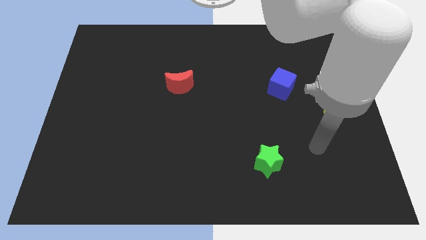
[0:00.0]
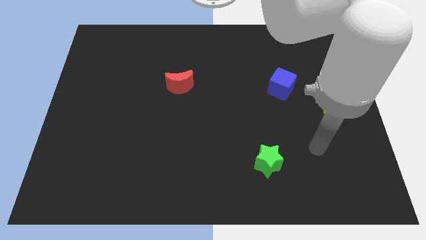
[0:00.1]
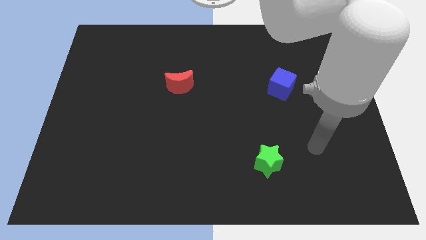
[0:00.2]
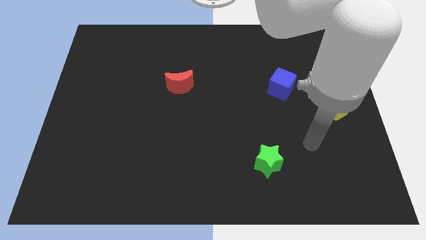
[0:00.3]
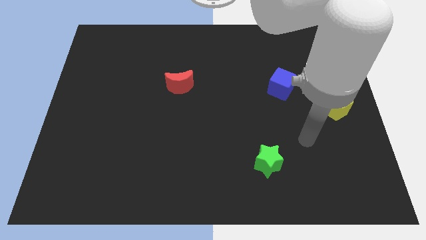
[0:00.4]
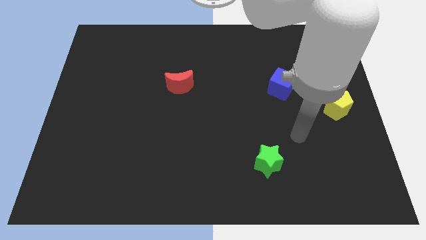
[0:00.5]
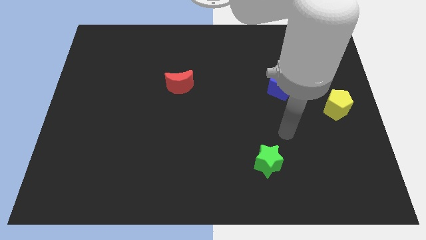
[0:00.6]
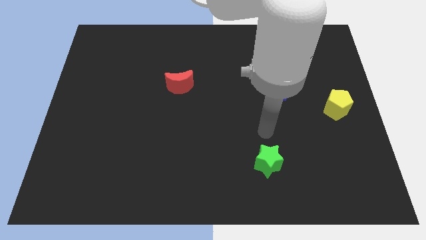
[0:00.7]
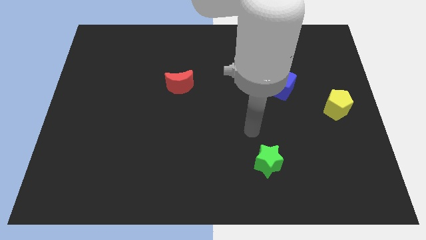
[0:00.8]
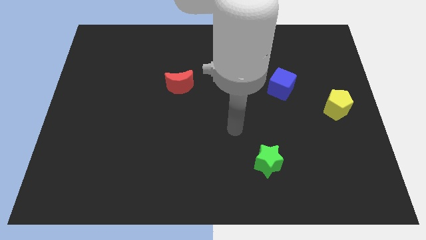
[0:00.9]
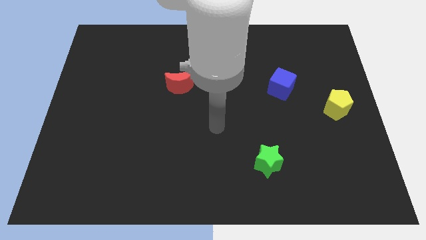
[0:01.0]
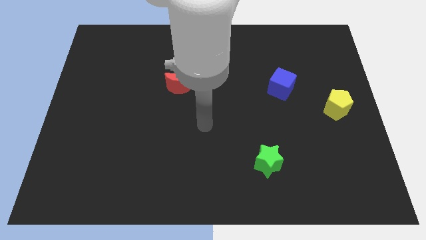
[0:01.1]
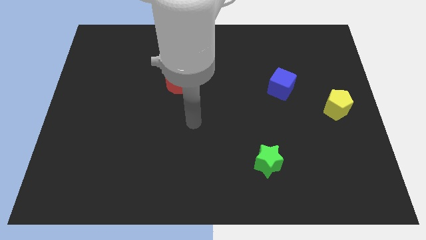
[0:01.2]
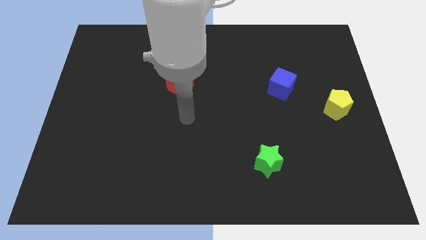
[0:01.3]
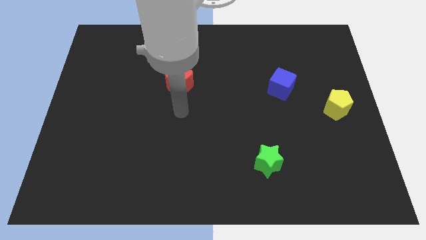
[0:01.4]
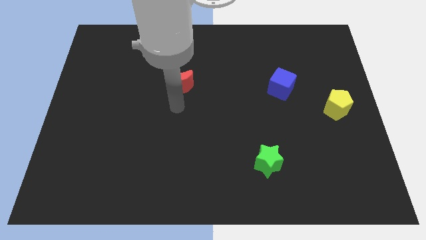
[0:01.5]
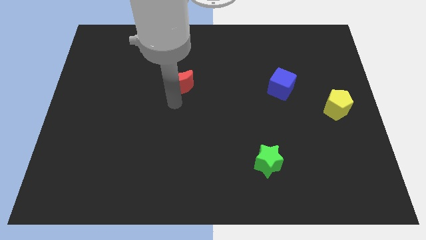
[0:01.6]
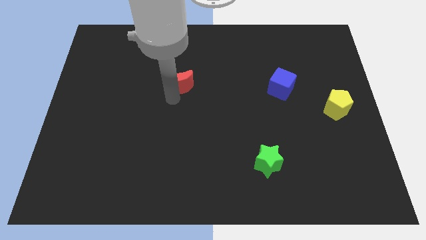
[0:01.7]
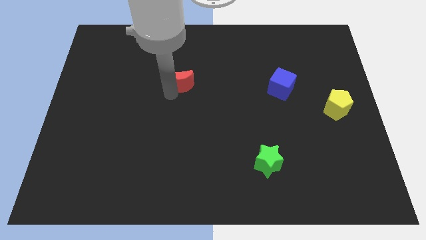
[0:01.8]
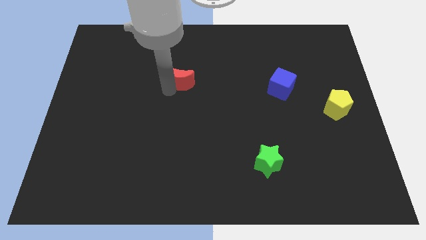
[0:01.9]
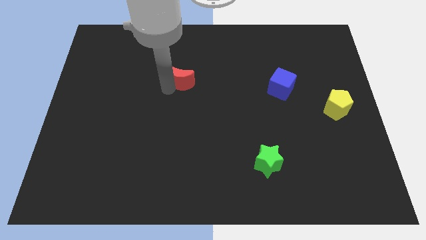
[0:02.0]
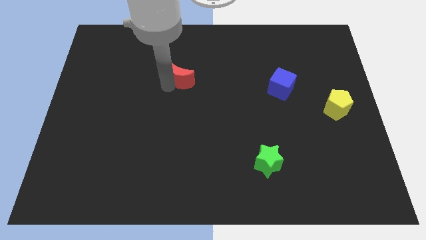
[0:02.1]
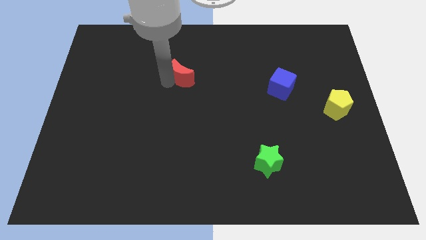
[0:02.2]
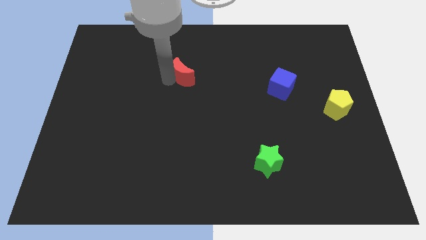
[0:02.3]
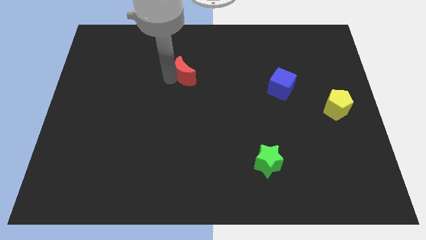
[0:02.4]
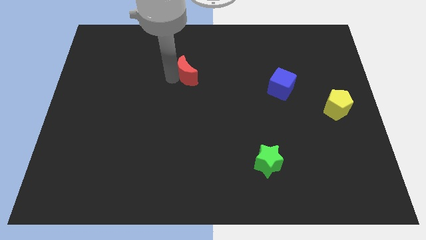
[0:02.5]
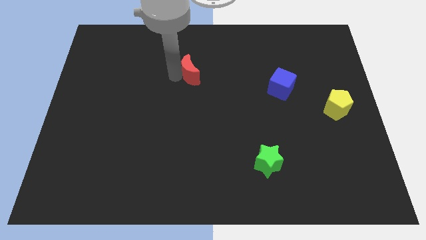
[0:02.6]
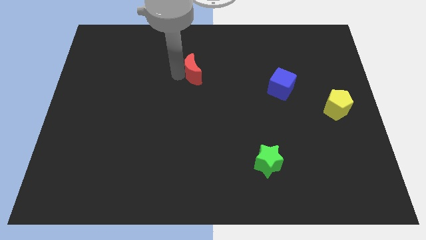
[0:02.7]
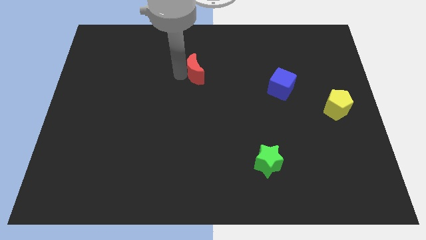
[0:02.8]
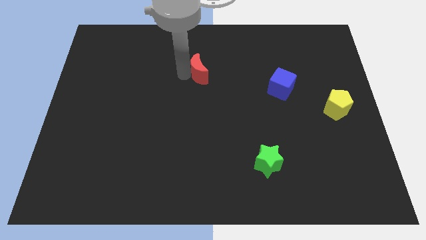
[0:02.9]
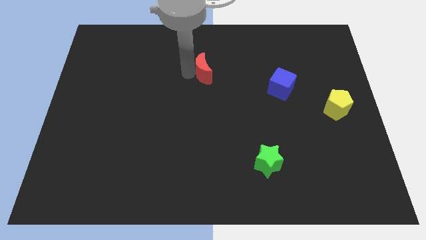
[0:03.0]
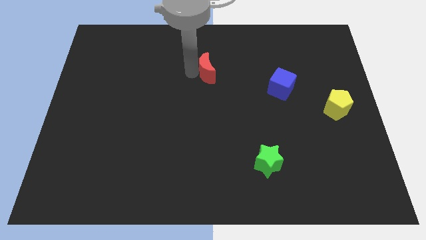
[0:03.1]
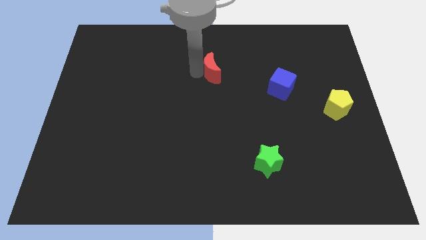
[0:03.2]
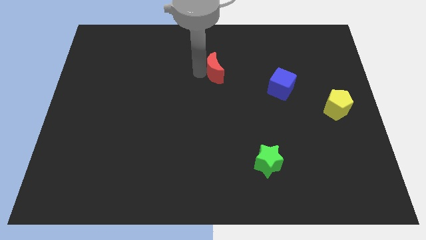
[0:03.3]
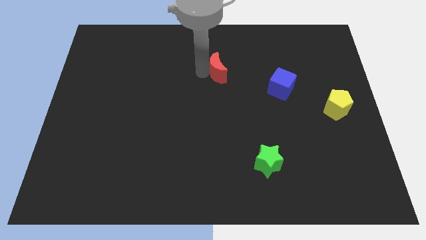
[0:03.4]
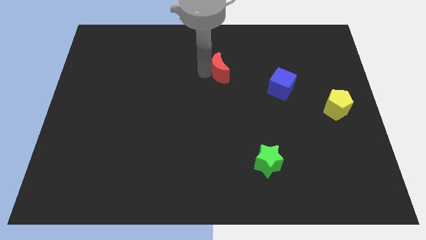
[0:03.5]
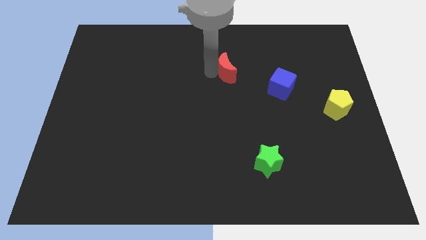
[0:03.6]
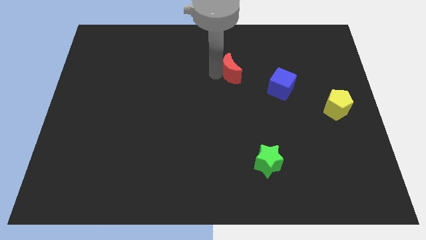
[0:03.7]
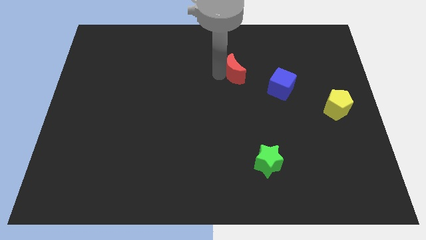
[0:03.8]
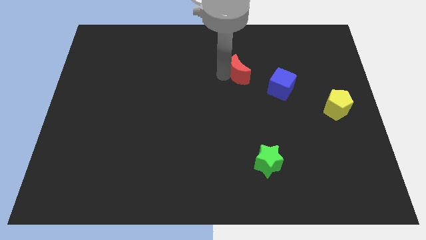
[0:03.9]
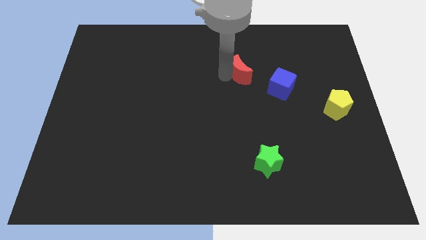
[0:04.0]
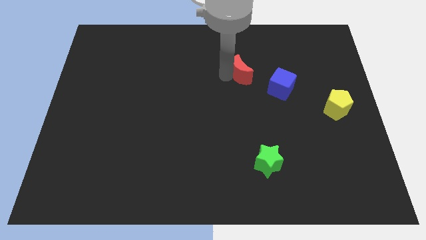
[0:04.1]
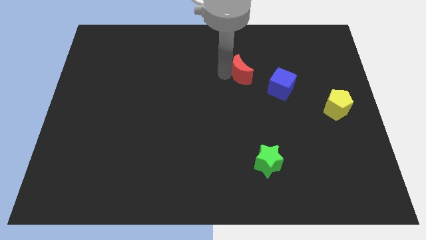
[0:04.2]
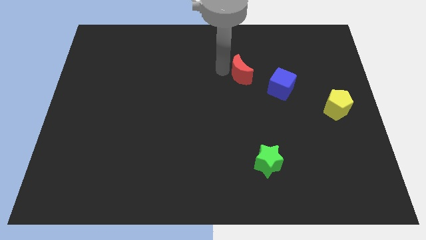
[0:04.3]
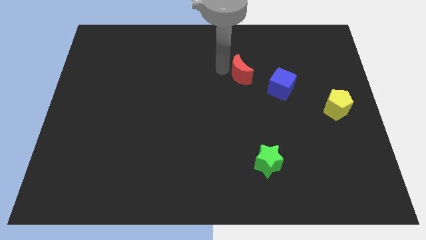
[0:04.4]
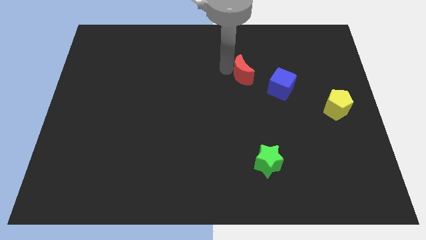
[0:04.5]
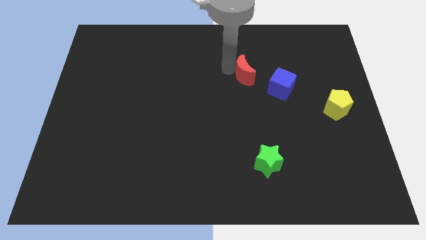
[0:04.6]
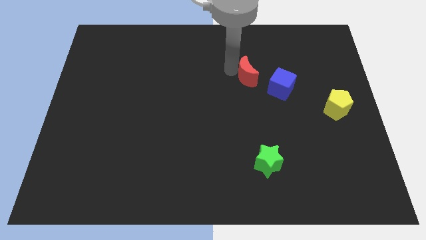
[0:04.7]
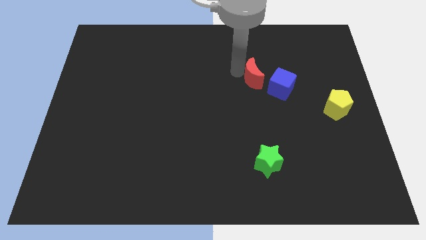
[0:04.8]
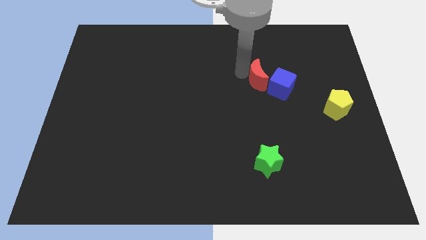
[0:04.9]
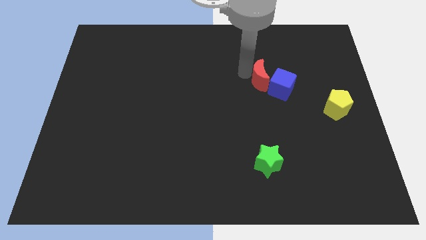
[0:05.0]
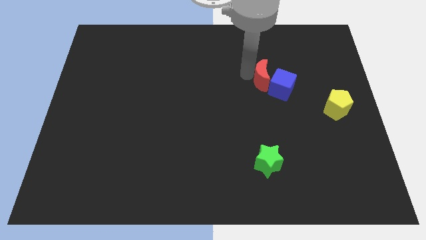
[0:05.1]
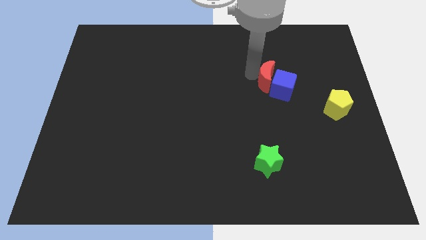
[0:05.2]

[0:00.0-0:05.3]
push the red block to the blue cube

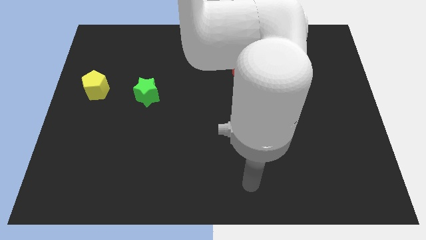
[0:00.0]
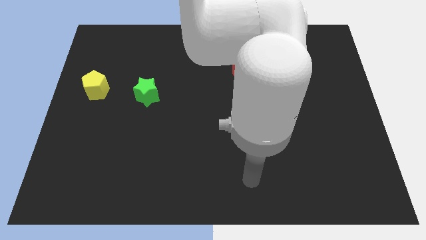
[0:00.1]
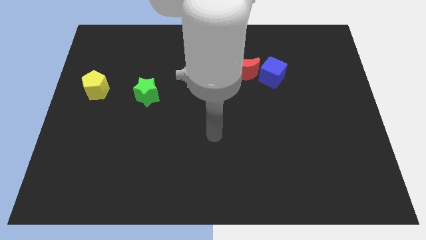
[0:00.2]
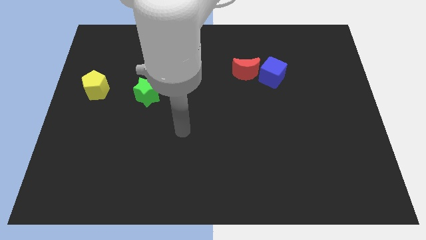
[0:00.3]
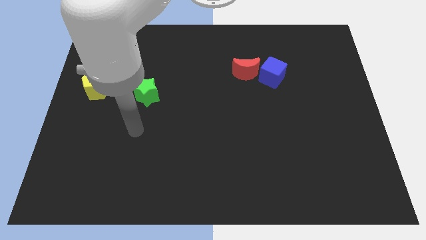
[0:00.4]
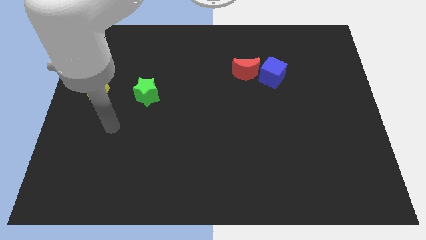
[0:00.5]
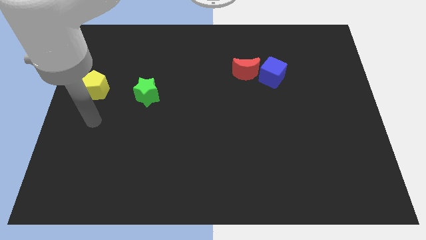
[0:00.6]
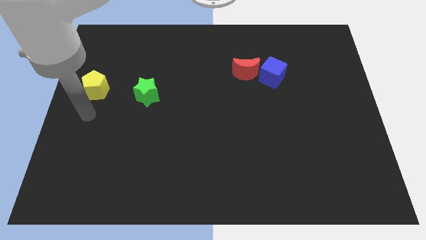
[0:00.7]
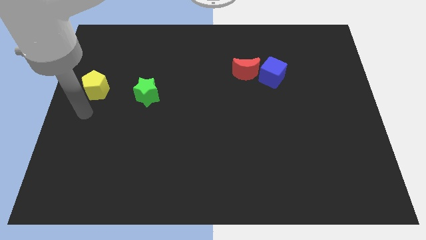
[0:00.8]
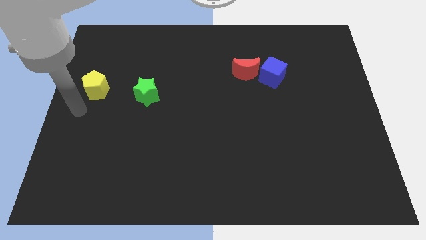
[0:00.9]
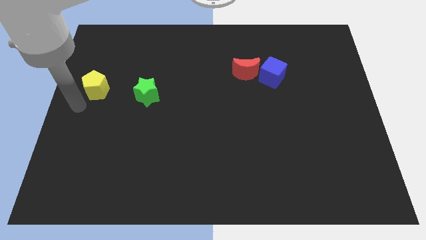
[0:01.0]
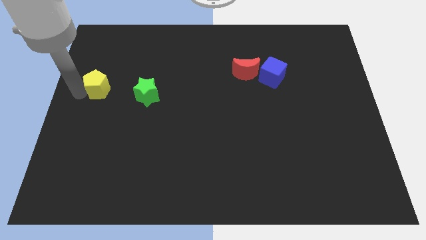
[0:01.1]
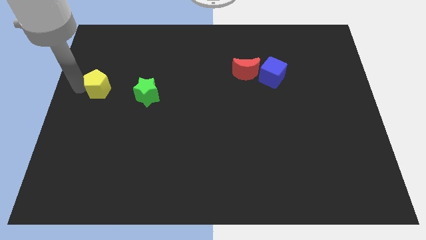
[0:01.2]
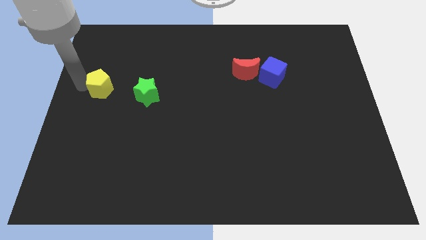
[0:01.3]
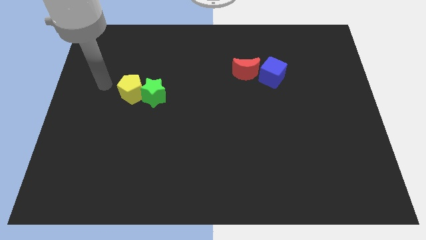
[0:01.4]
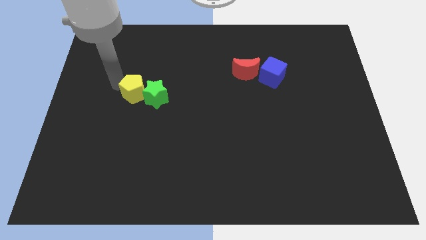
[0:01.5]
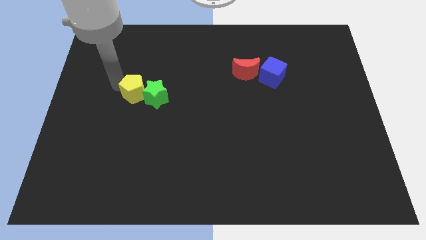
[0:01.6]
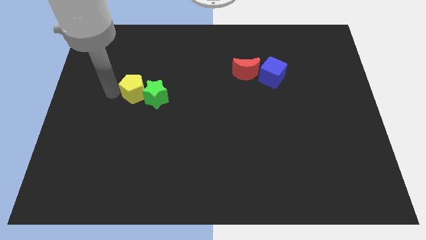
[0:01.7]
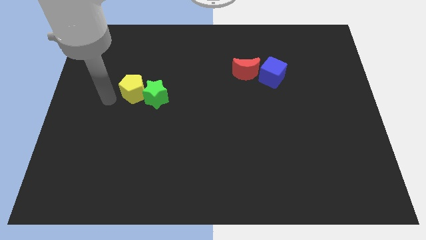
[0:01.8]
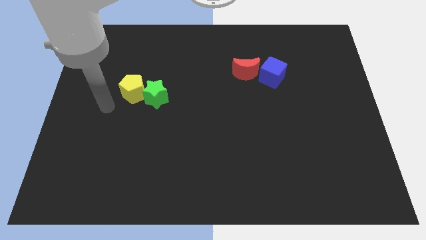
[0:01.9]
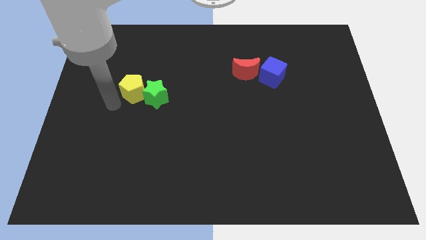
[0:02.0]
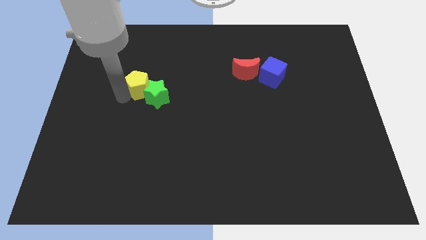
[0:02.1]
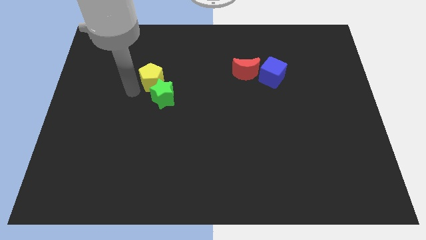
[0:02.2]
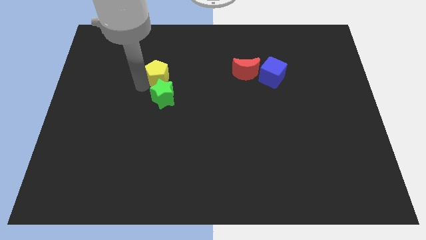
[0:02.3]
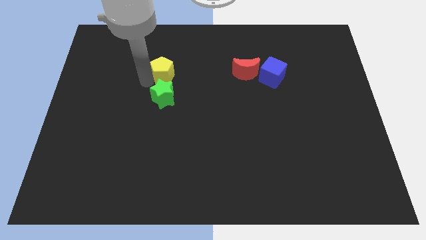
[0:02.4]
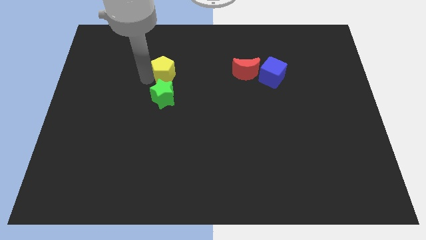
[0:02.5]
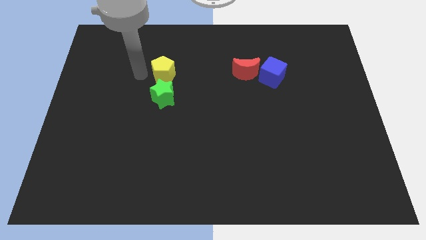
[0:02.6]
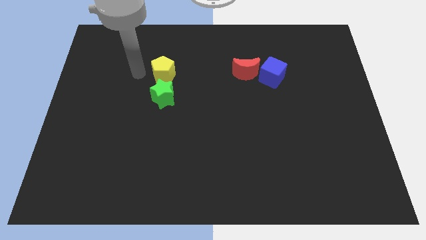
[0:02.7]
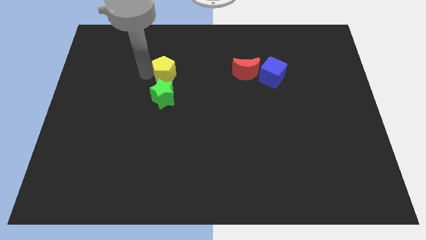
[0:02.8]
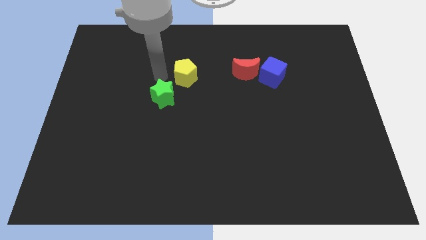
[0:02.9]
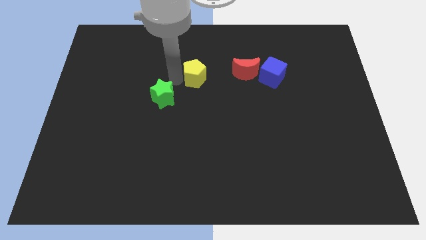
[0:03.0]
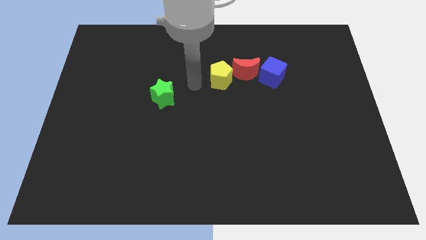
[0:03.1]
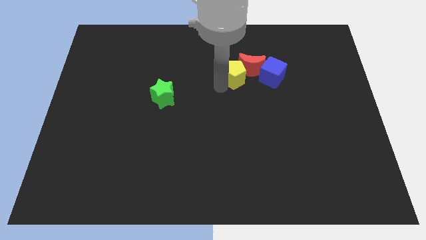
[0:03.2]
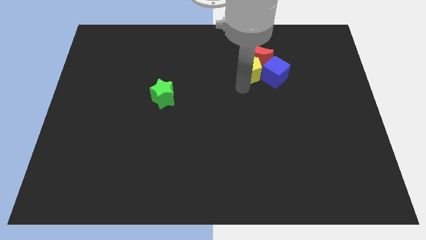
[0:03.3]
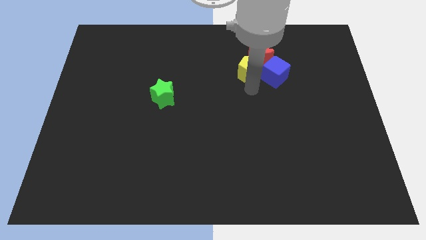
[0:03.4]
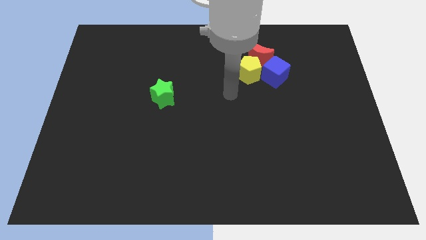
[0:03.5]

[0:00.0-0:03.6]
push the yellow block towards the blue cube
